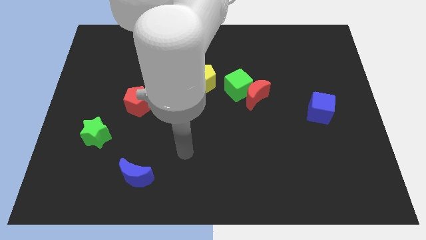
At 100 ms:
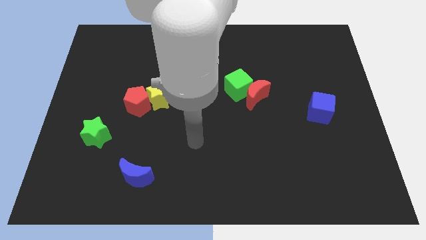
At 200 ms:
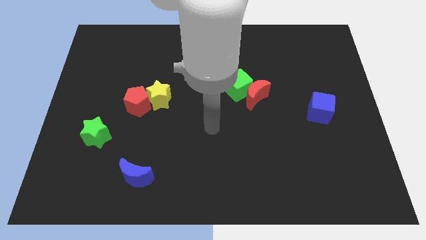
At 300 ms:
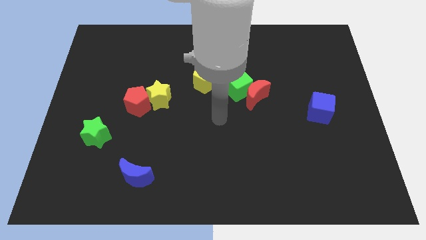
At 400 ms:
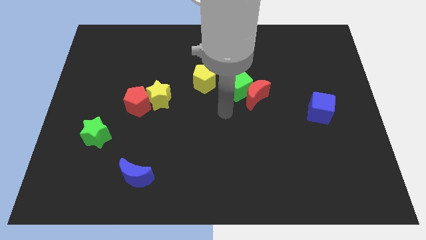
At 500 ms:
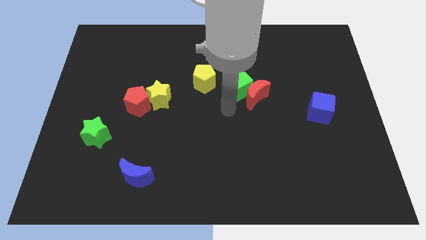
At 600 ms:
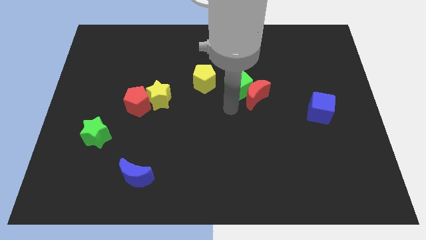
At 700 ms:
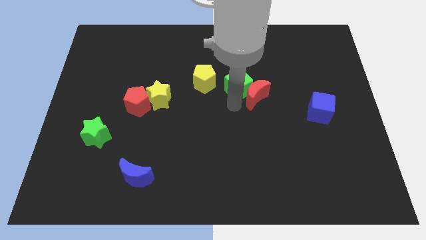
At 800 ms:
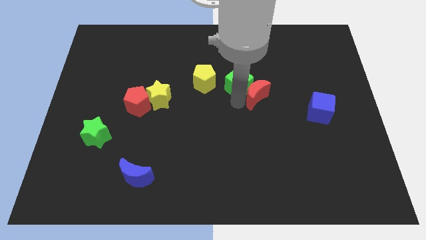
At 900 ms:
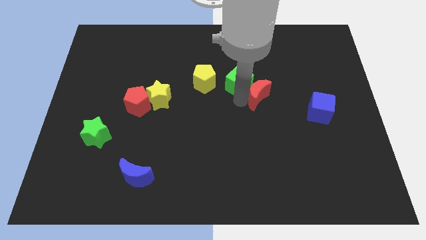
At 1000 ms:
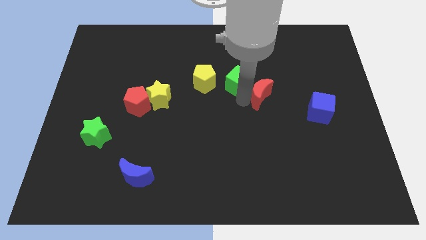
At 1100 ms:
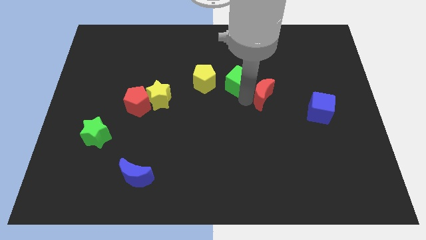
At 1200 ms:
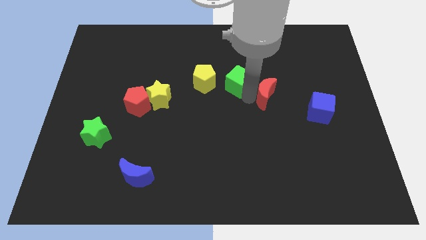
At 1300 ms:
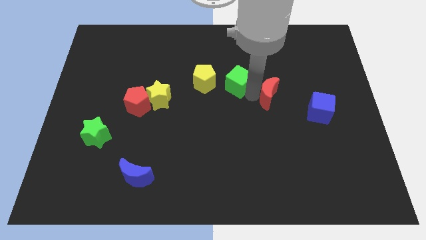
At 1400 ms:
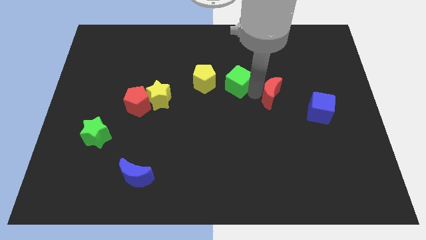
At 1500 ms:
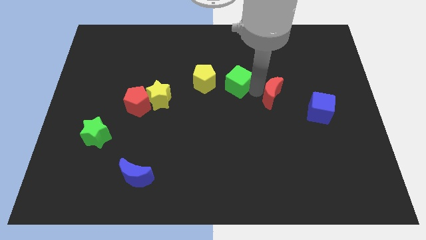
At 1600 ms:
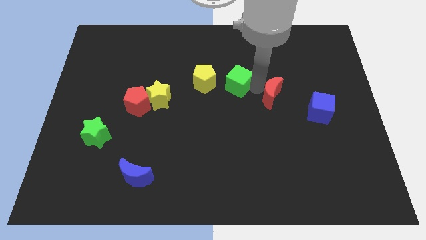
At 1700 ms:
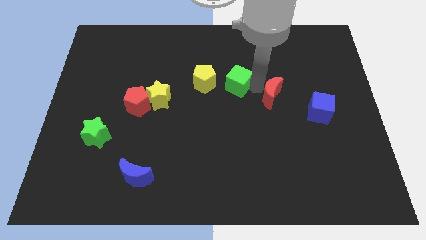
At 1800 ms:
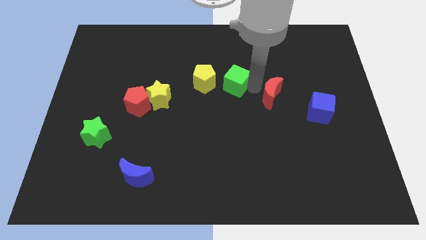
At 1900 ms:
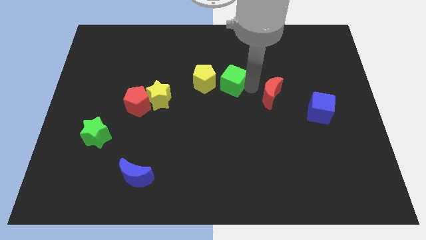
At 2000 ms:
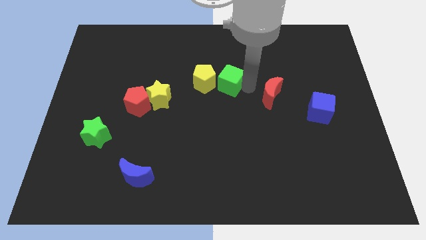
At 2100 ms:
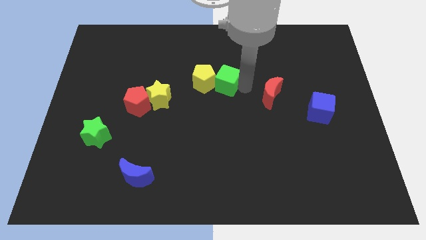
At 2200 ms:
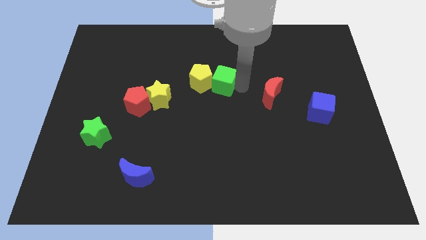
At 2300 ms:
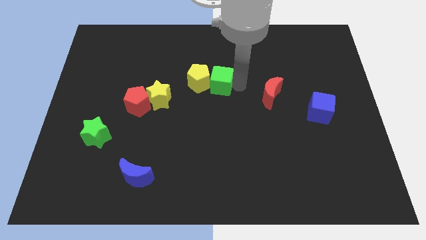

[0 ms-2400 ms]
push the green cube close to the yellow pentagon

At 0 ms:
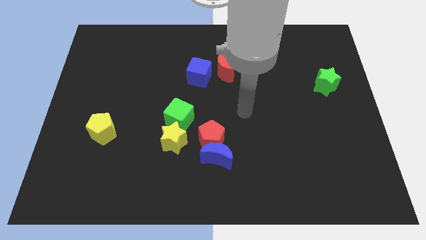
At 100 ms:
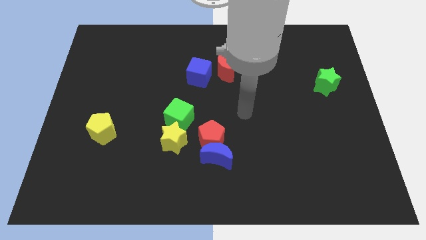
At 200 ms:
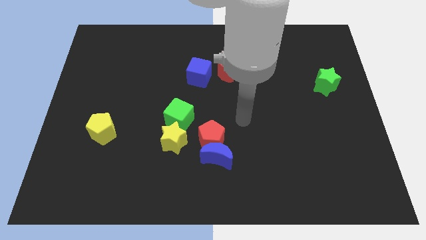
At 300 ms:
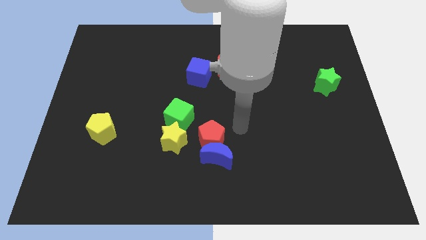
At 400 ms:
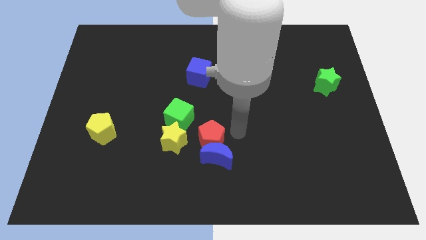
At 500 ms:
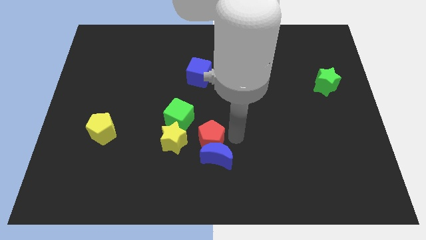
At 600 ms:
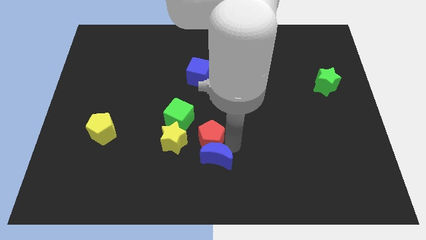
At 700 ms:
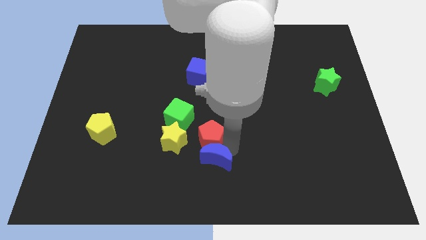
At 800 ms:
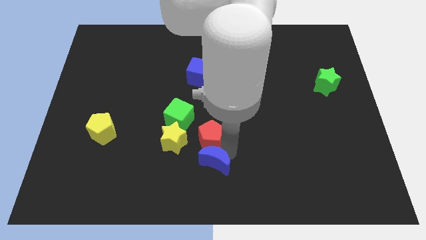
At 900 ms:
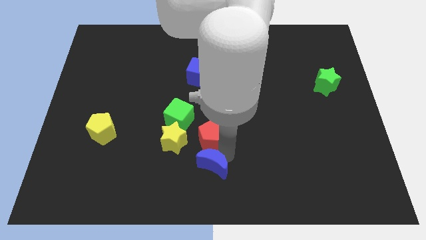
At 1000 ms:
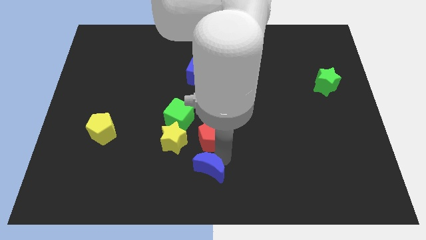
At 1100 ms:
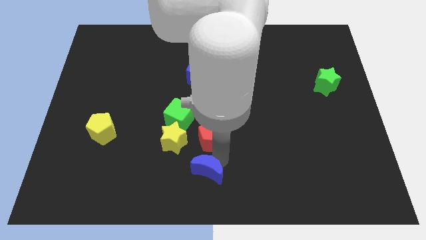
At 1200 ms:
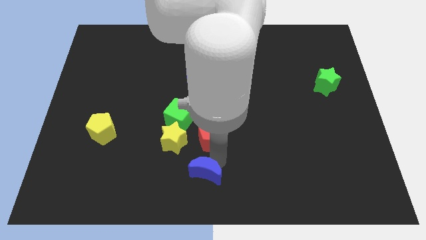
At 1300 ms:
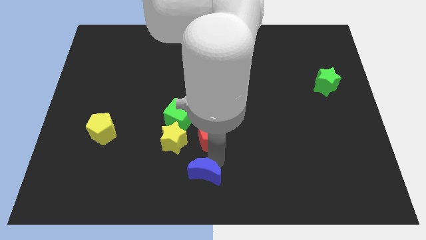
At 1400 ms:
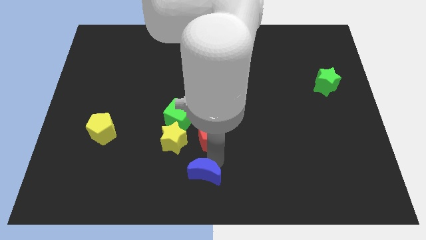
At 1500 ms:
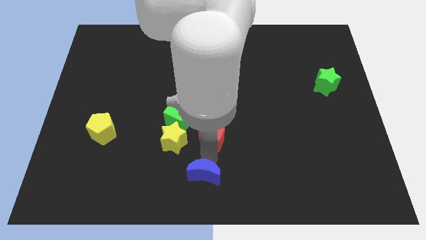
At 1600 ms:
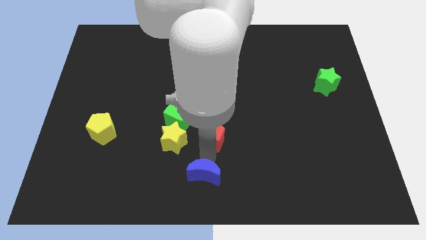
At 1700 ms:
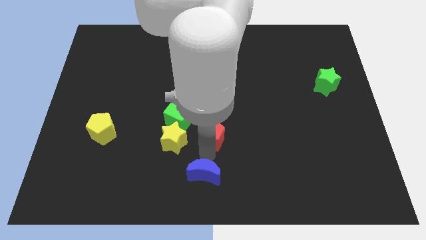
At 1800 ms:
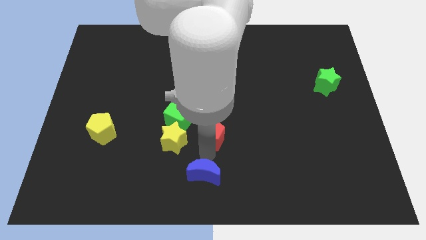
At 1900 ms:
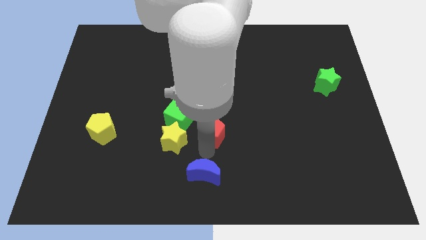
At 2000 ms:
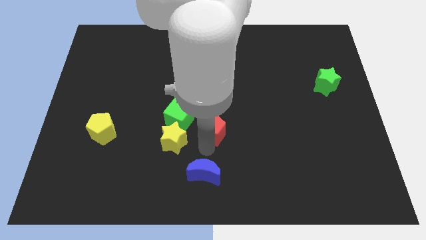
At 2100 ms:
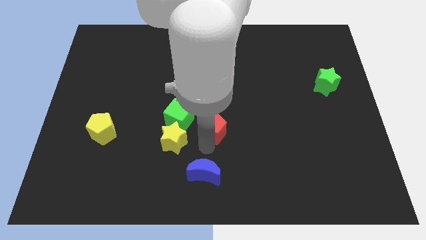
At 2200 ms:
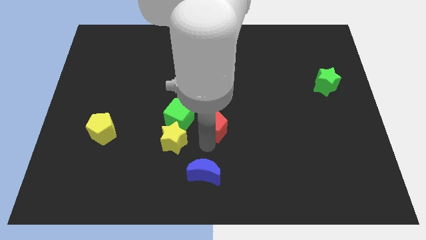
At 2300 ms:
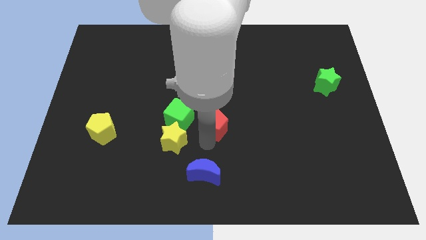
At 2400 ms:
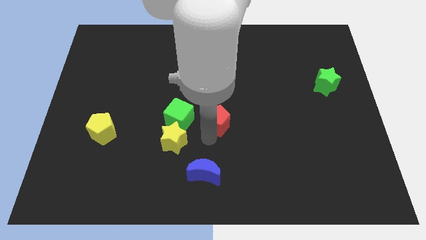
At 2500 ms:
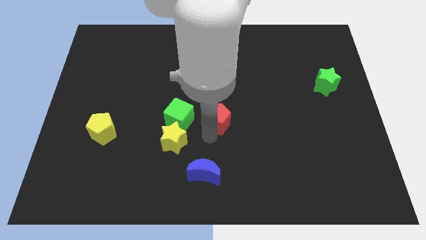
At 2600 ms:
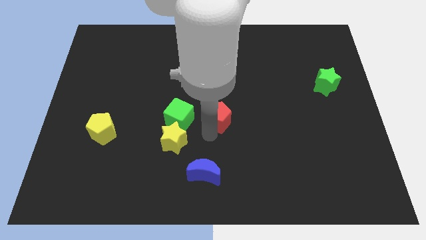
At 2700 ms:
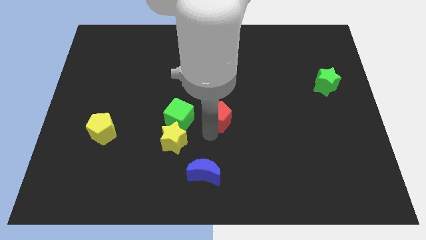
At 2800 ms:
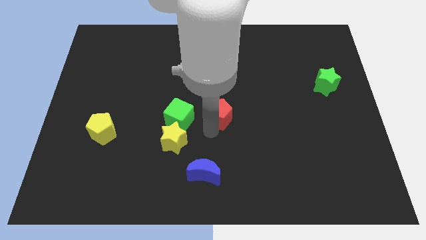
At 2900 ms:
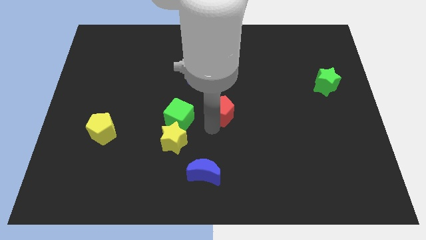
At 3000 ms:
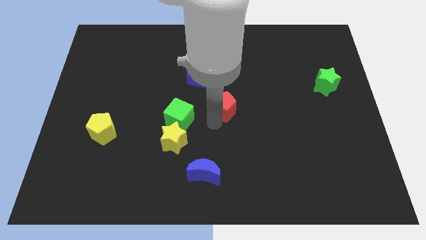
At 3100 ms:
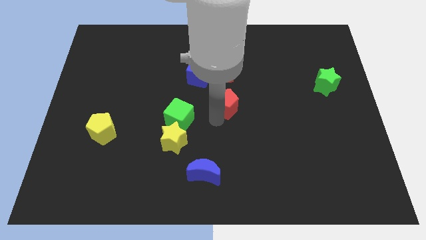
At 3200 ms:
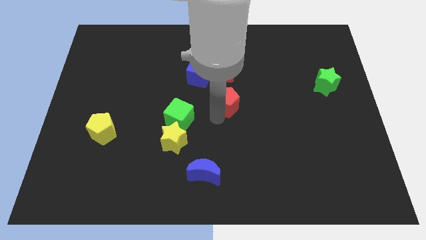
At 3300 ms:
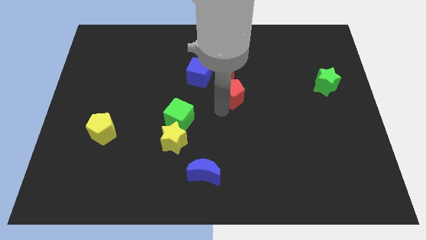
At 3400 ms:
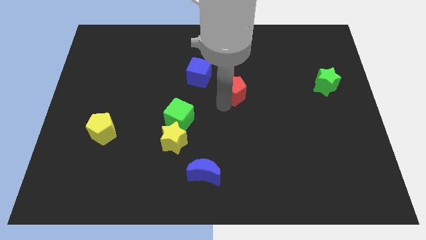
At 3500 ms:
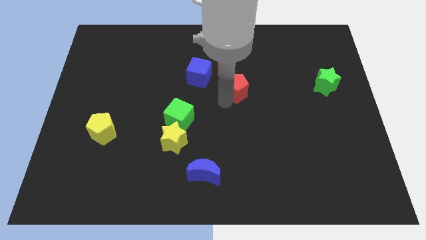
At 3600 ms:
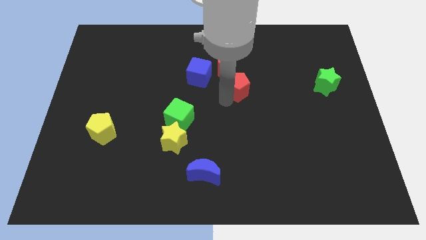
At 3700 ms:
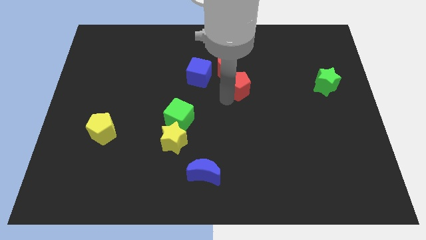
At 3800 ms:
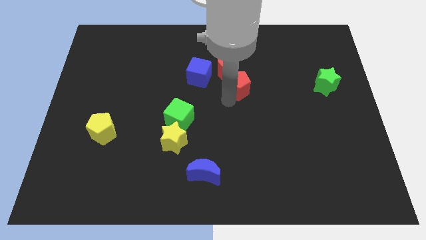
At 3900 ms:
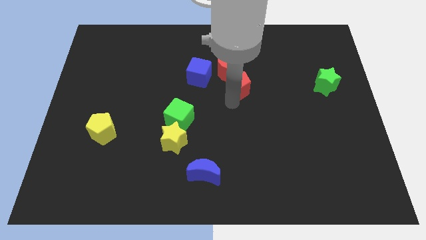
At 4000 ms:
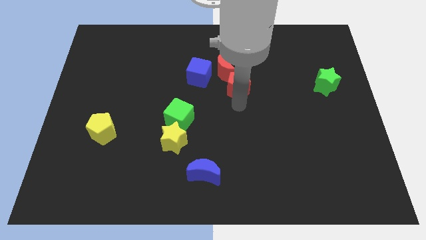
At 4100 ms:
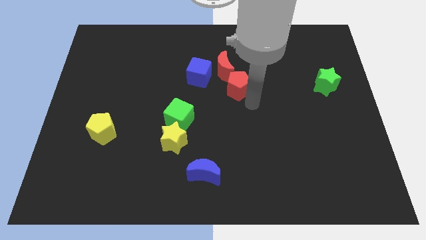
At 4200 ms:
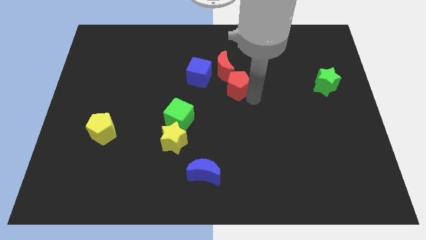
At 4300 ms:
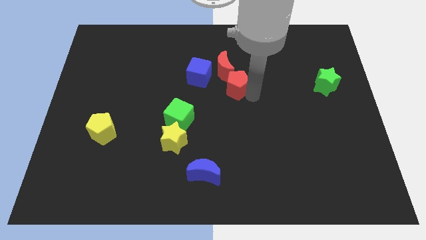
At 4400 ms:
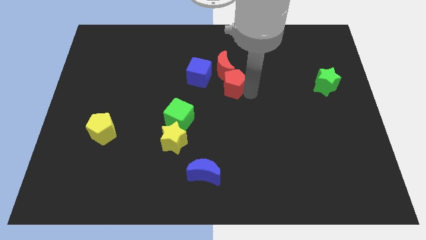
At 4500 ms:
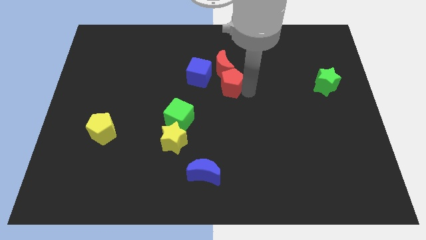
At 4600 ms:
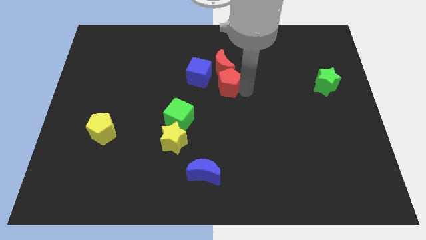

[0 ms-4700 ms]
slide the red pentagon to the red moon

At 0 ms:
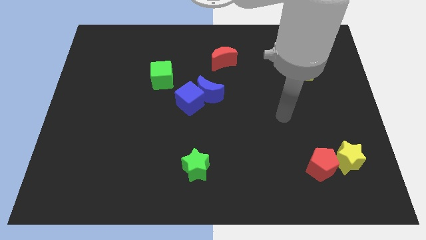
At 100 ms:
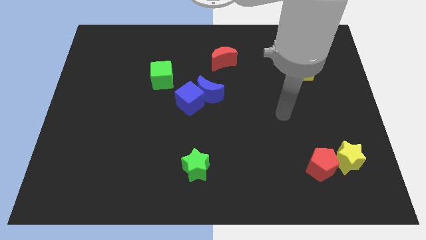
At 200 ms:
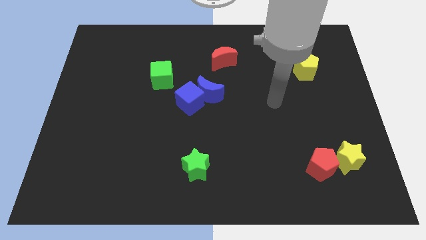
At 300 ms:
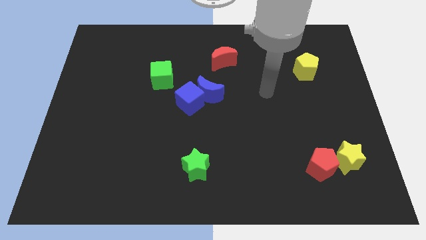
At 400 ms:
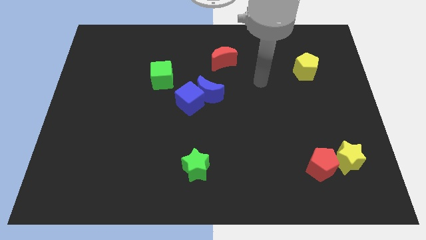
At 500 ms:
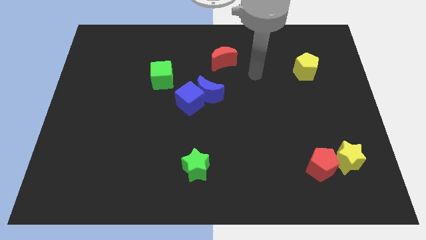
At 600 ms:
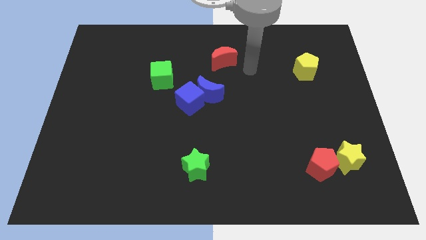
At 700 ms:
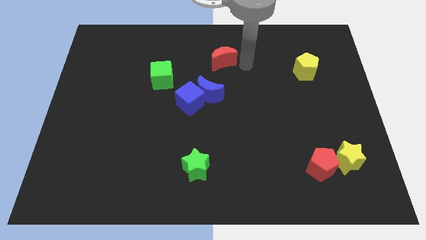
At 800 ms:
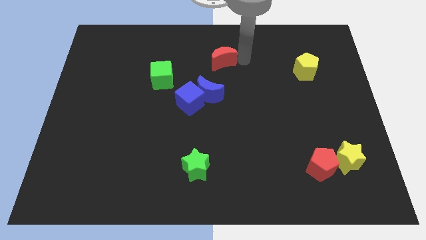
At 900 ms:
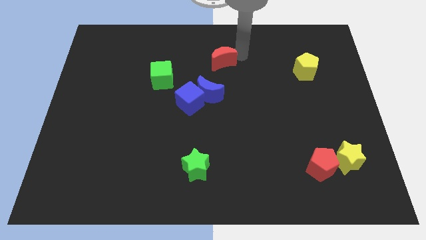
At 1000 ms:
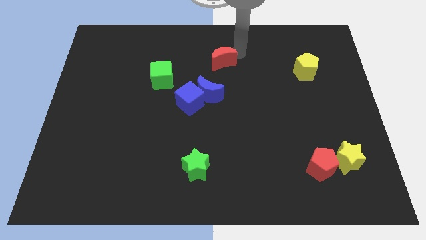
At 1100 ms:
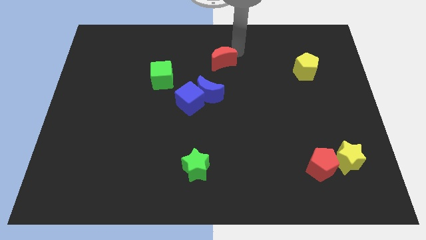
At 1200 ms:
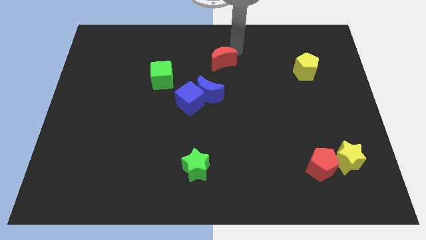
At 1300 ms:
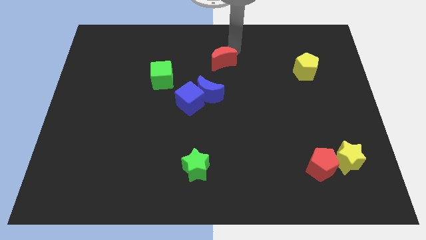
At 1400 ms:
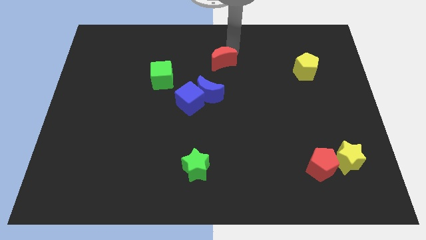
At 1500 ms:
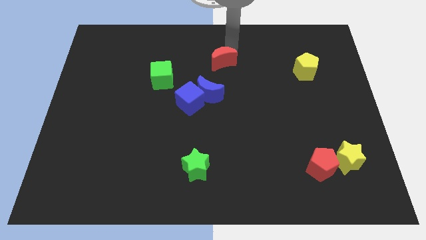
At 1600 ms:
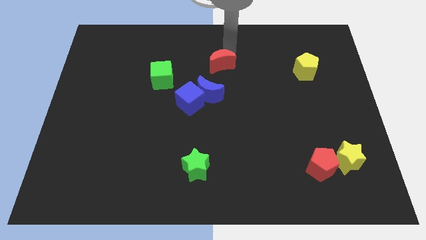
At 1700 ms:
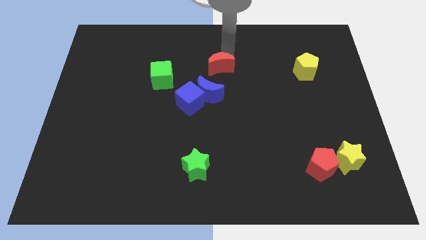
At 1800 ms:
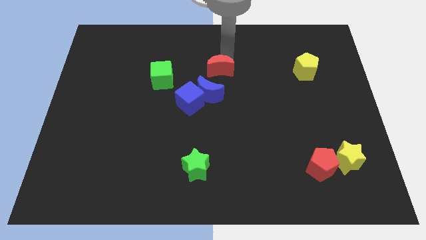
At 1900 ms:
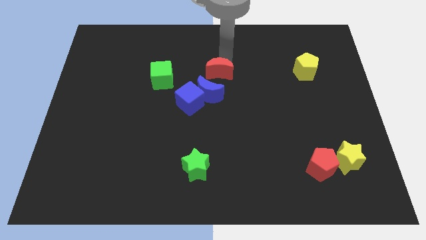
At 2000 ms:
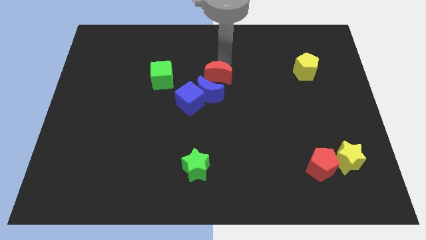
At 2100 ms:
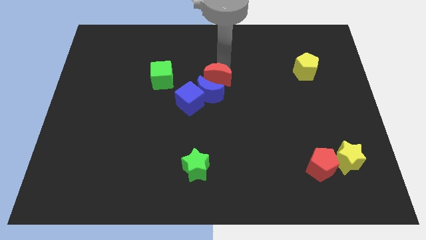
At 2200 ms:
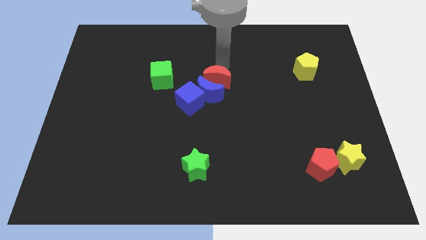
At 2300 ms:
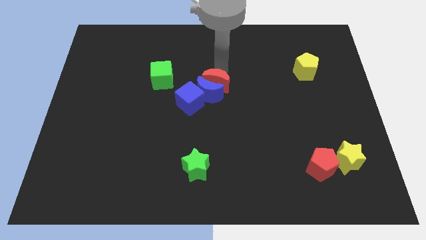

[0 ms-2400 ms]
move the red moon next to the blue moon
